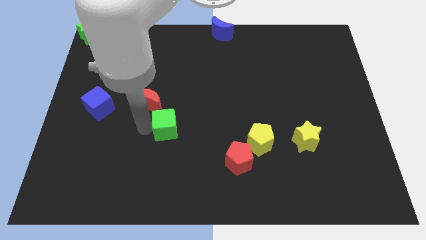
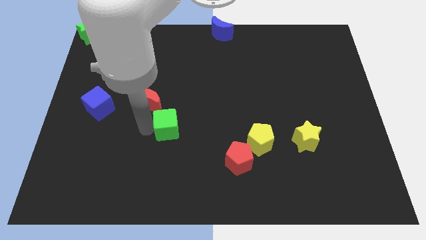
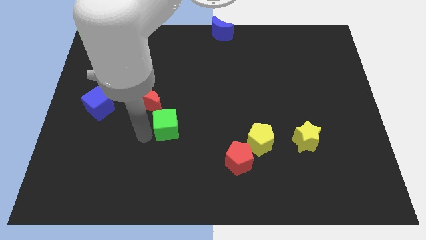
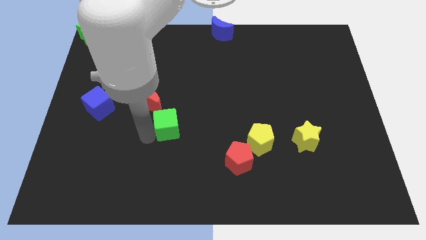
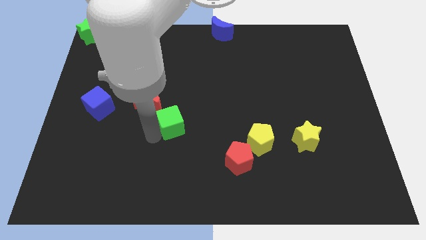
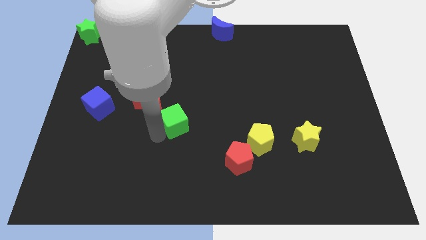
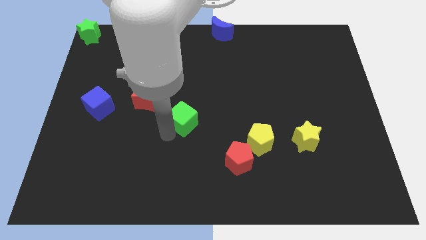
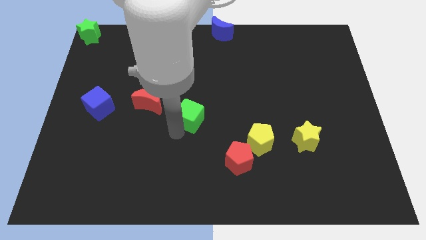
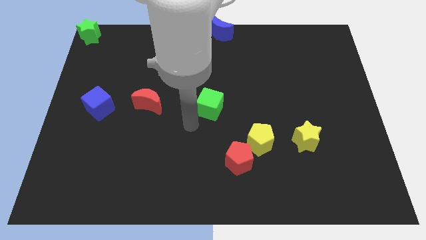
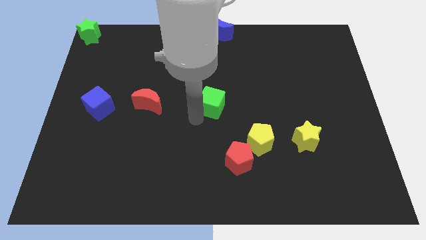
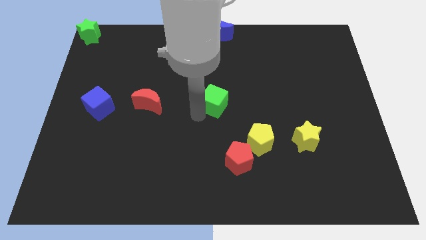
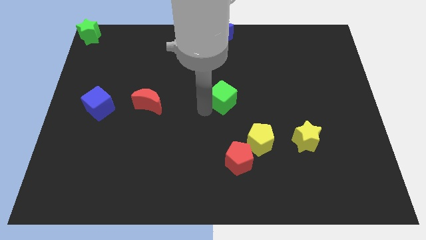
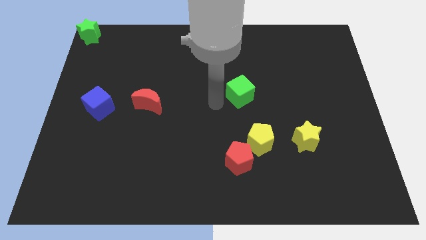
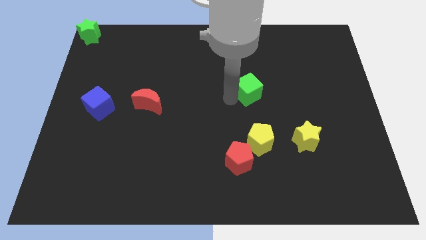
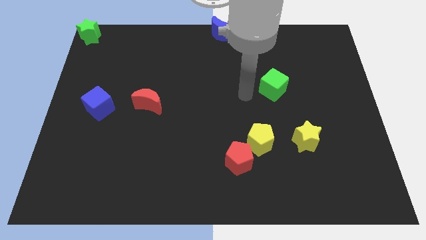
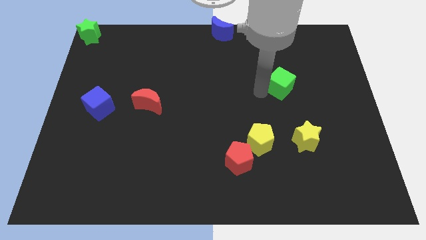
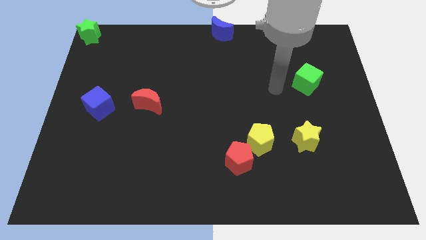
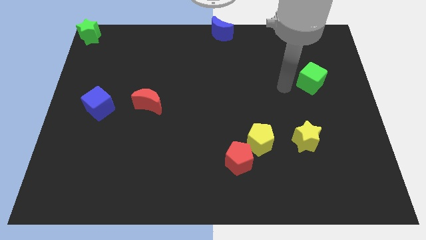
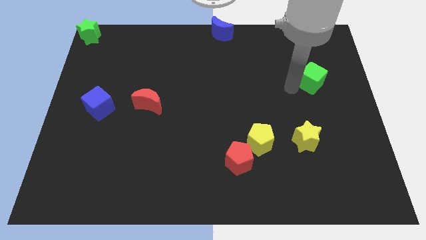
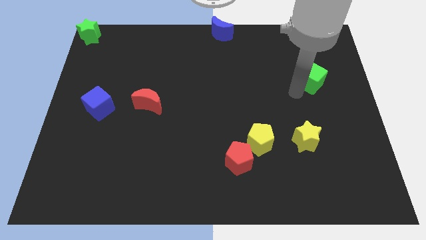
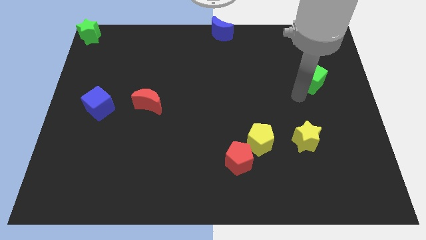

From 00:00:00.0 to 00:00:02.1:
separate green cube from red moon

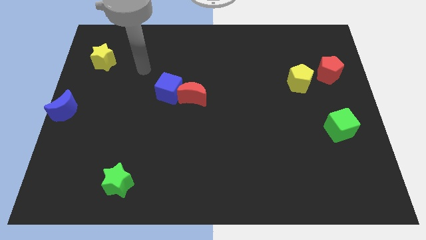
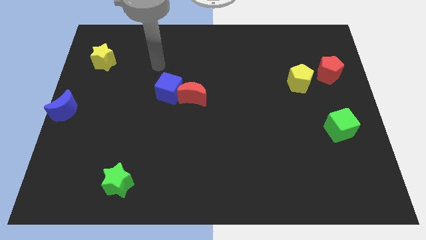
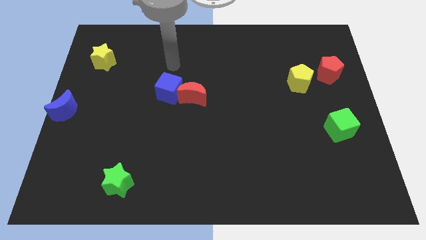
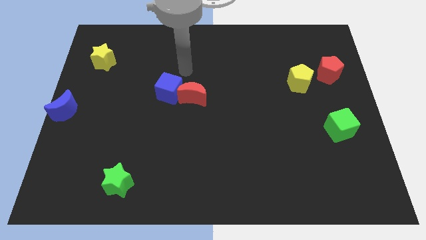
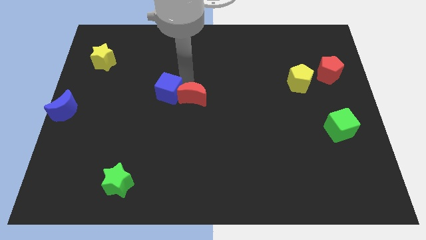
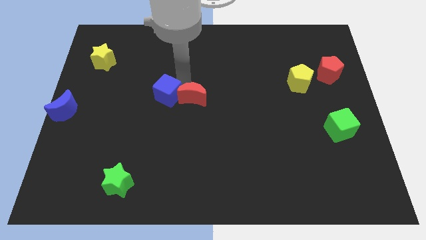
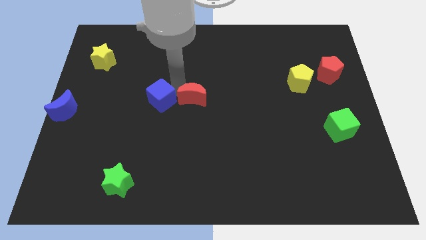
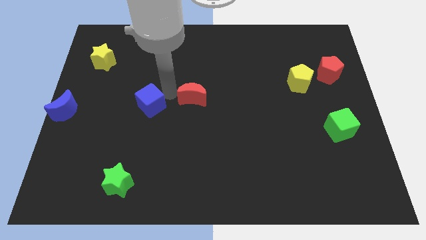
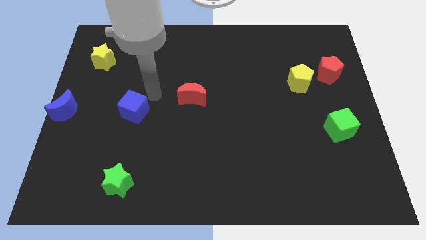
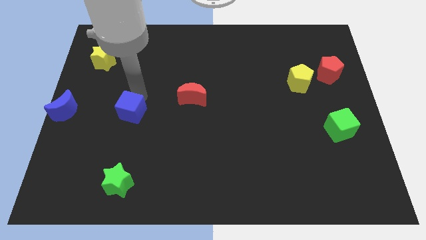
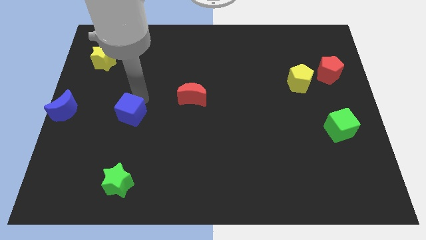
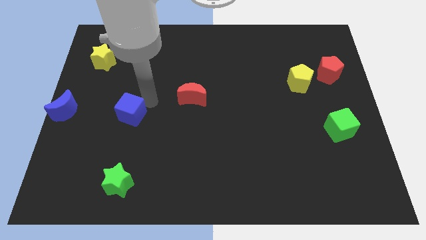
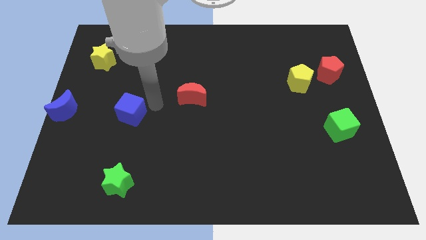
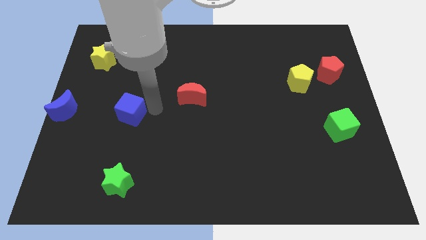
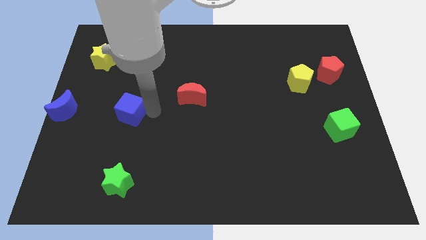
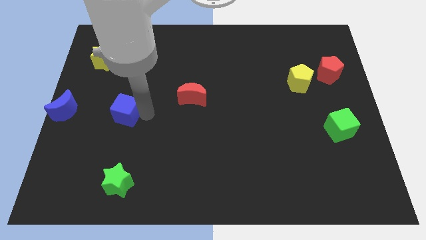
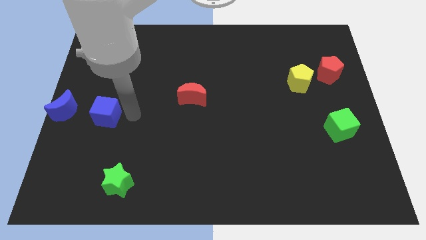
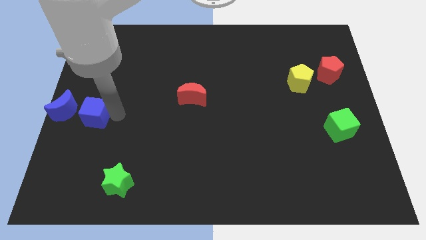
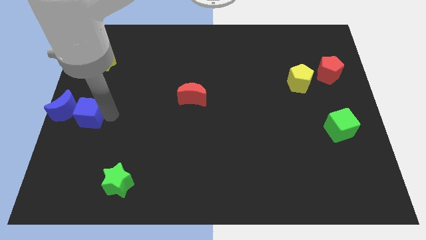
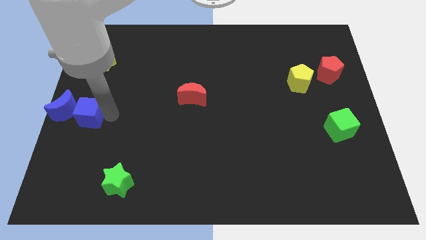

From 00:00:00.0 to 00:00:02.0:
move the blue cube parallel below the yellow star

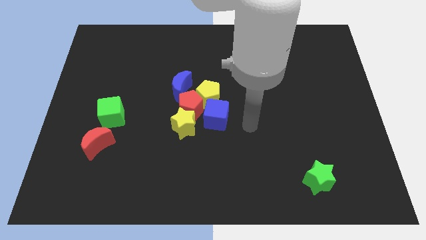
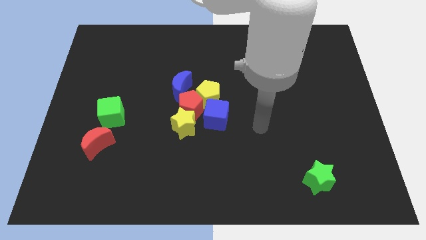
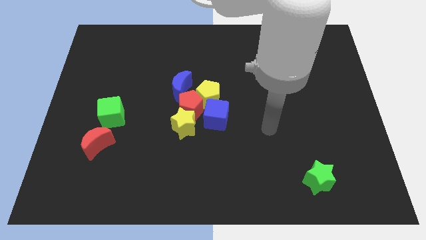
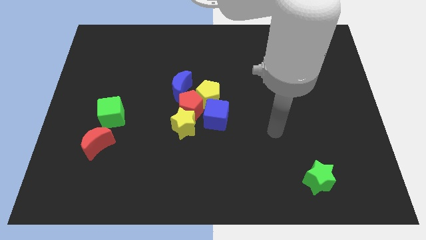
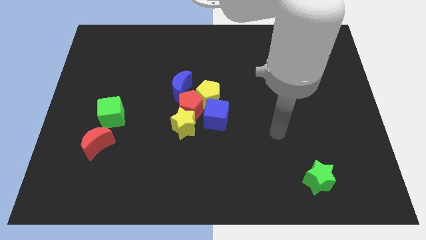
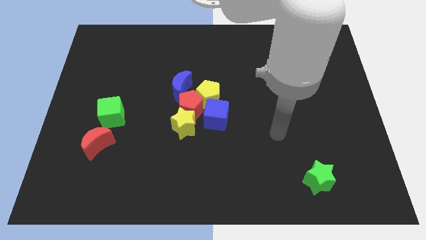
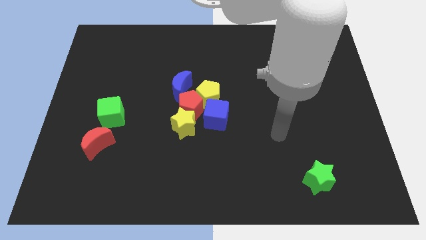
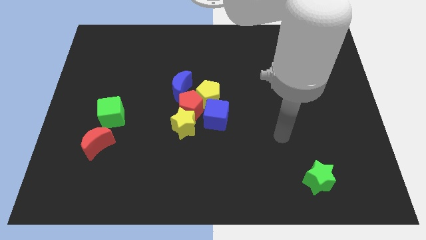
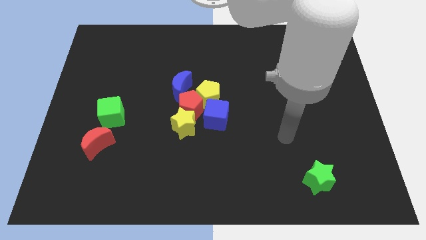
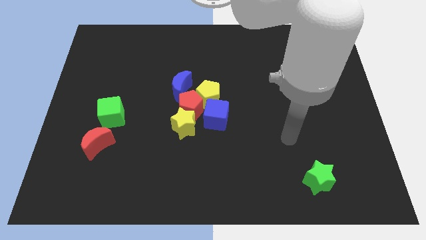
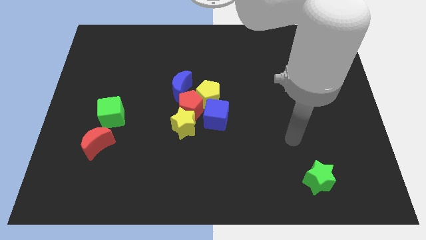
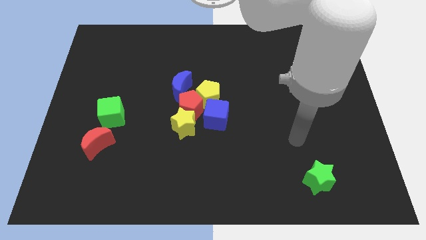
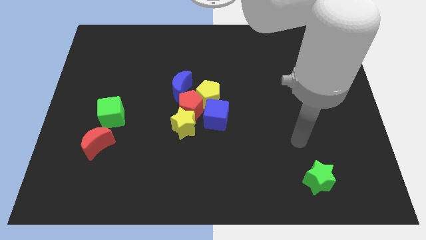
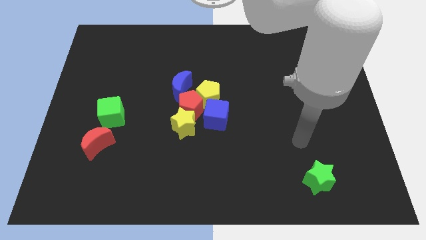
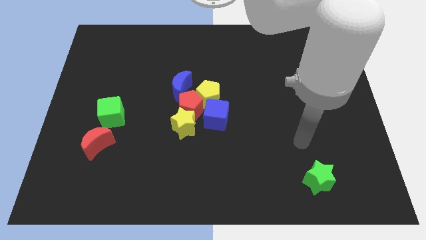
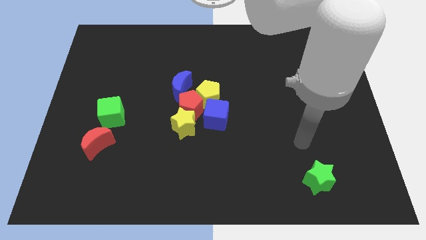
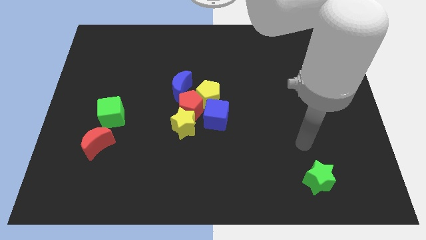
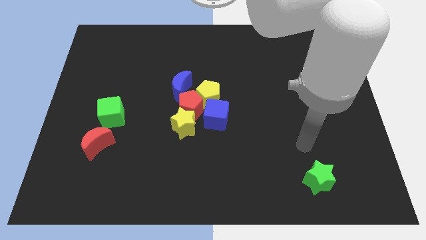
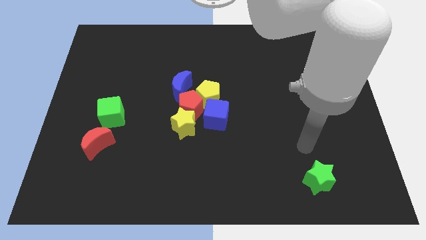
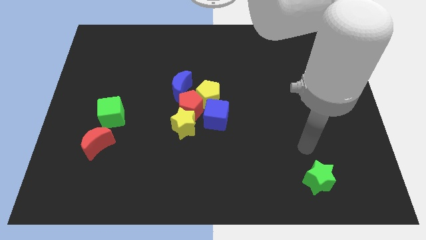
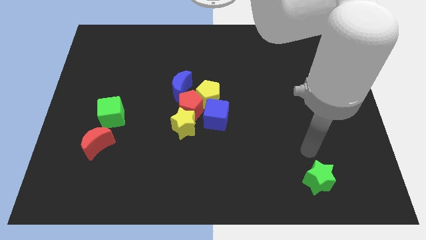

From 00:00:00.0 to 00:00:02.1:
place your arm to the top of the green star

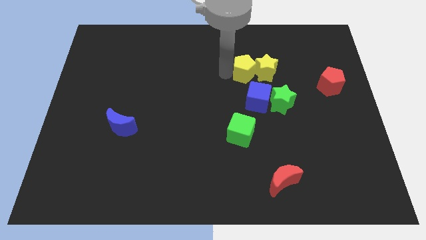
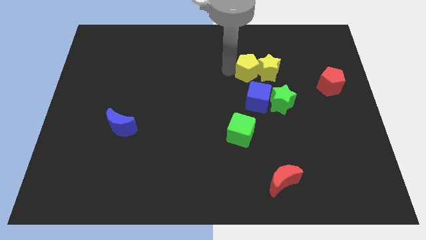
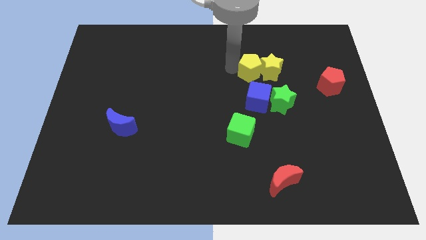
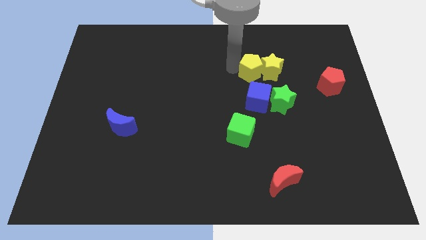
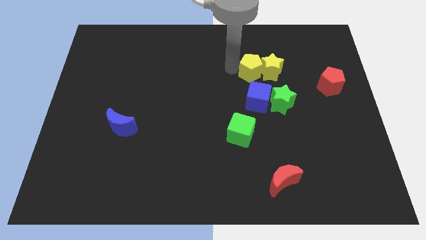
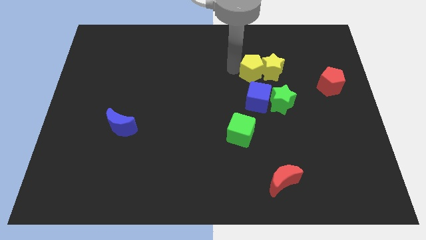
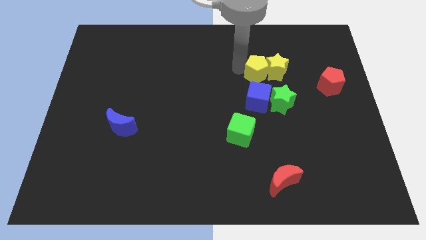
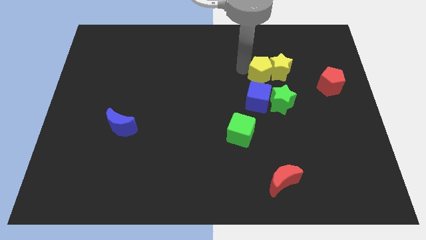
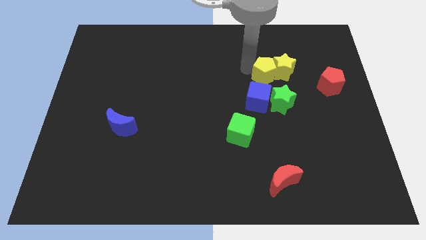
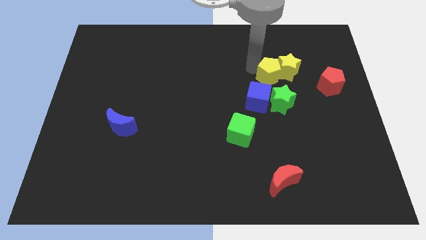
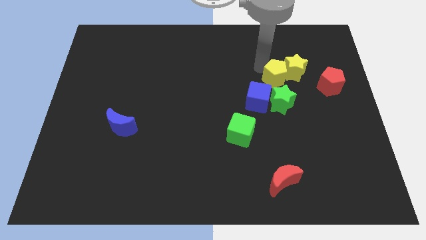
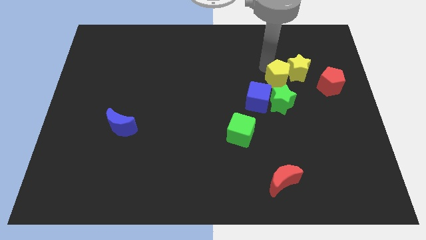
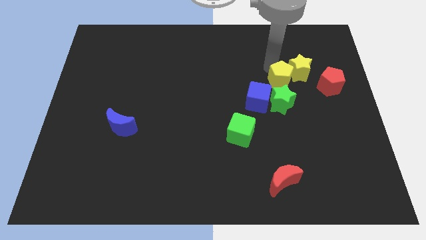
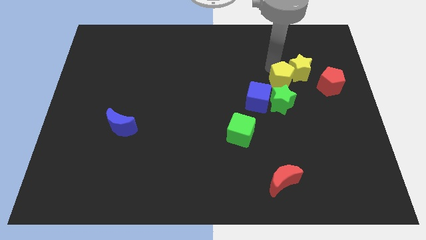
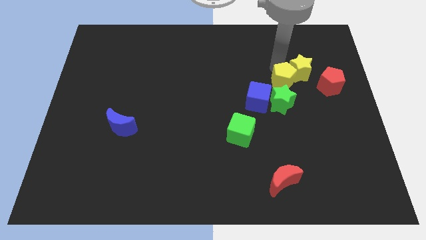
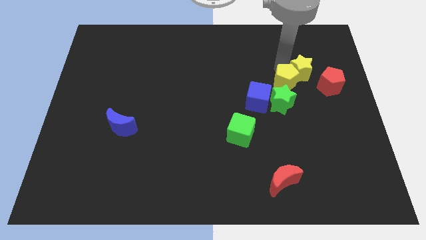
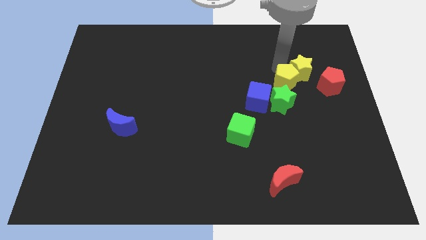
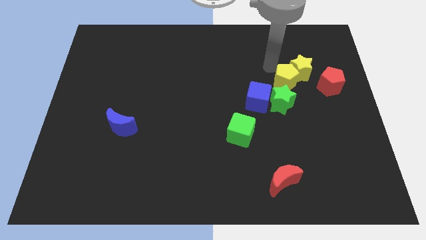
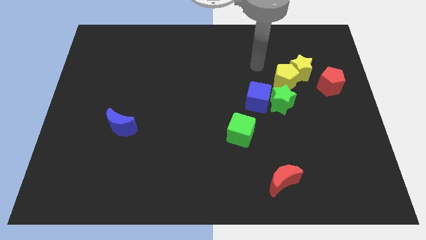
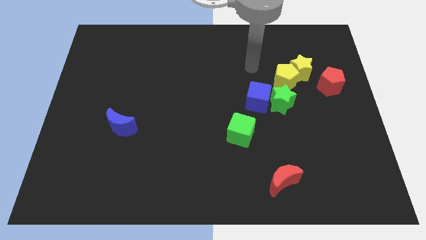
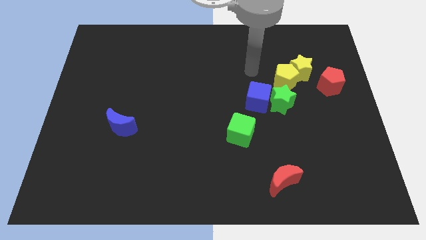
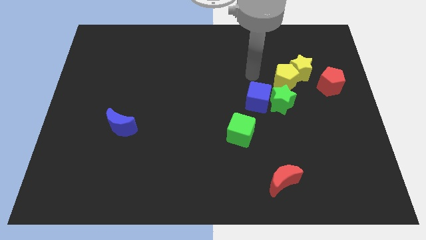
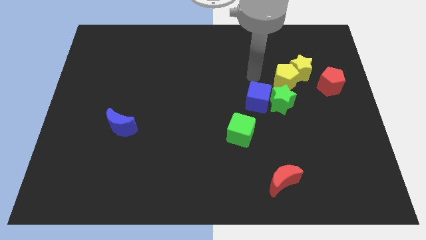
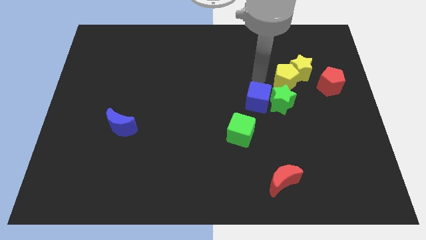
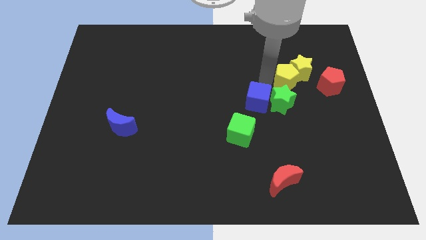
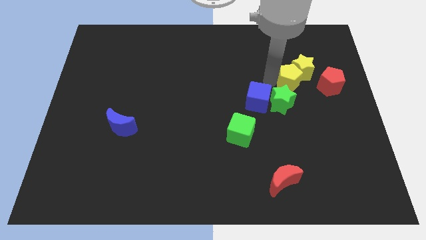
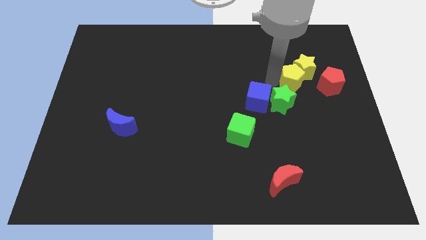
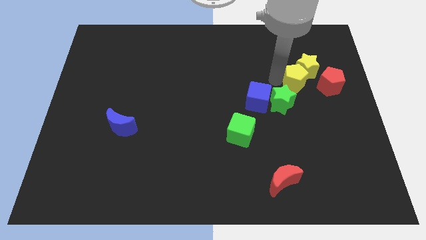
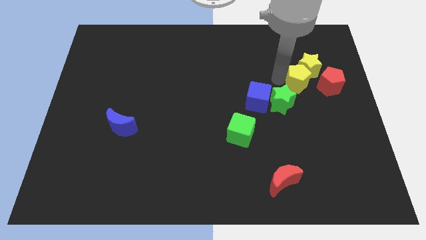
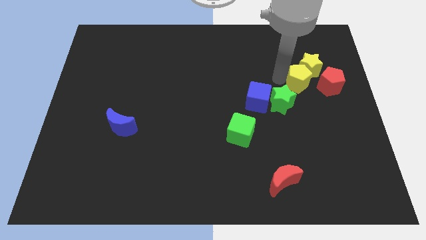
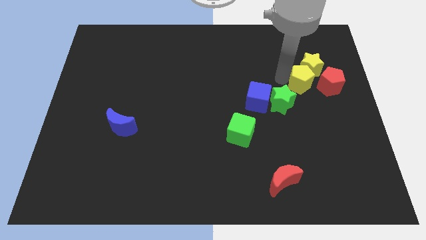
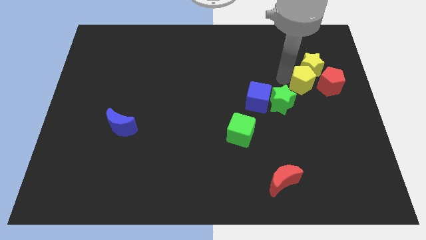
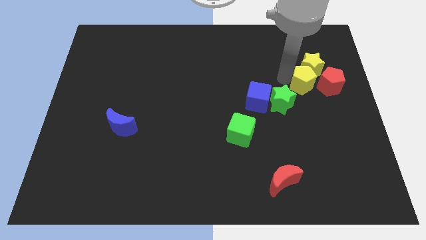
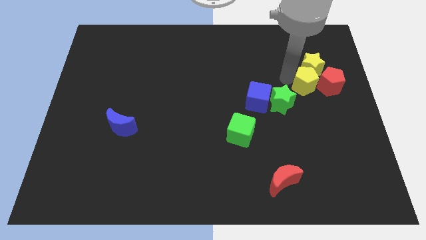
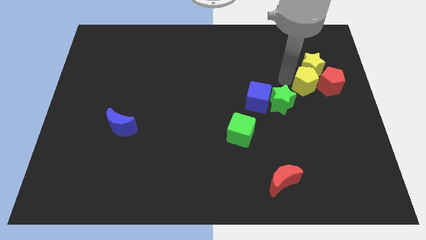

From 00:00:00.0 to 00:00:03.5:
move yellow blocks towards red pentagon
